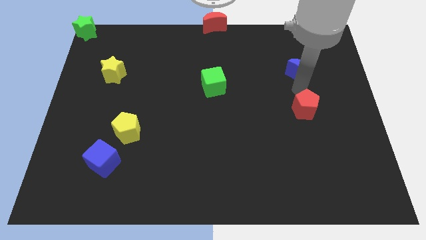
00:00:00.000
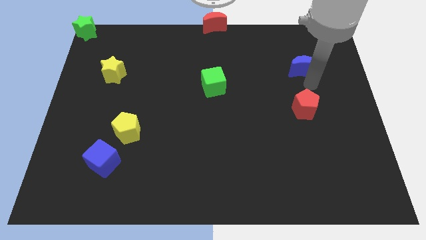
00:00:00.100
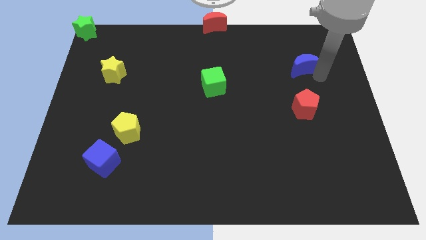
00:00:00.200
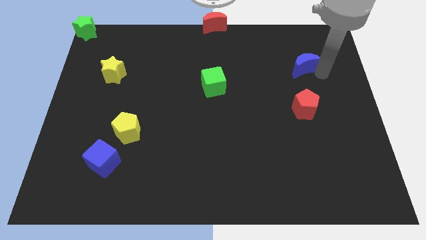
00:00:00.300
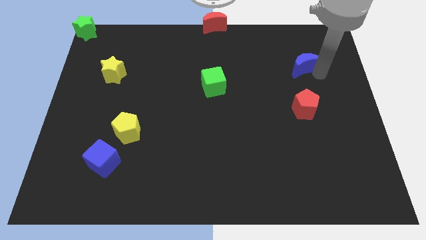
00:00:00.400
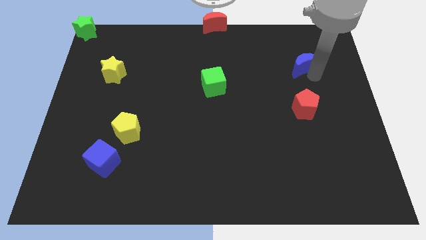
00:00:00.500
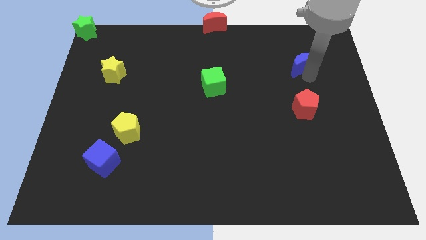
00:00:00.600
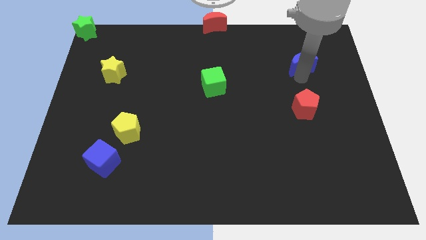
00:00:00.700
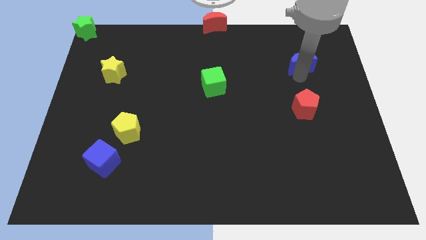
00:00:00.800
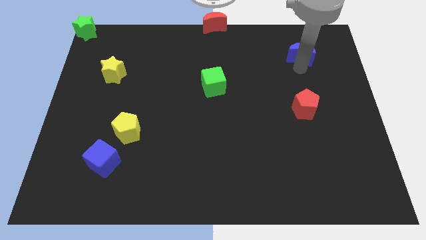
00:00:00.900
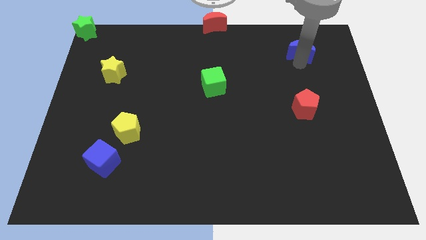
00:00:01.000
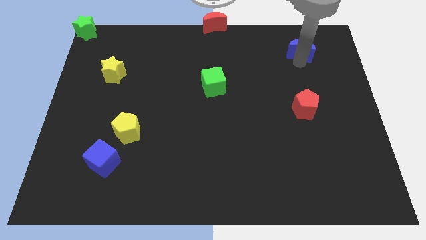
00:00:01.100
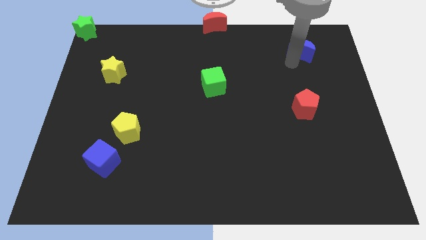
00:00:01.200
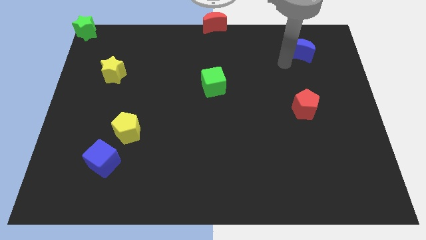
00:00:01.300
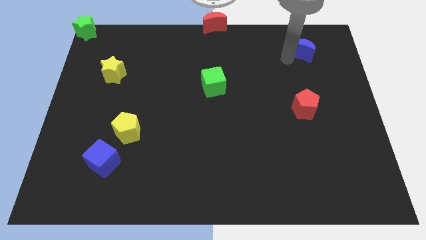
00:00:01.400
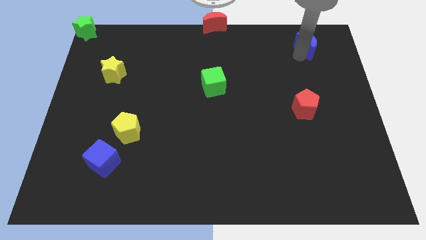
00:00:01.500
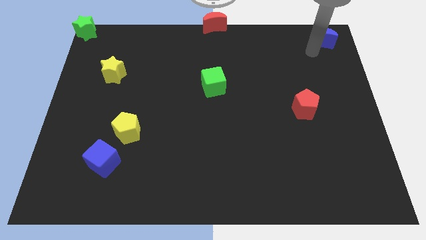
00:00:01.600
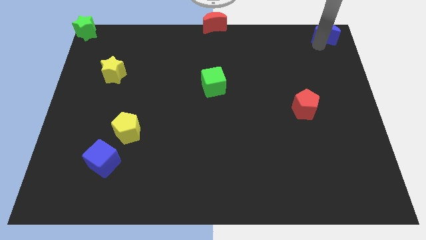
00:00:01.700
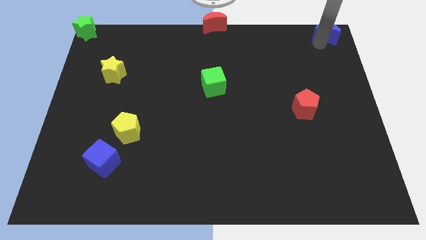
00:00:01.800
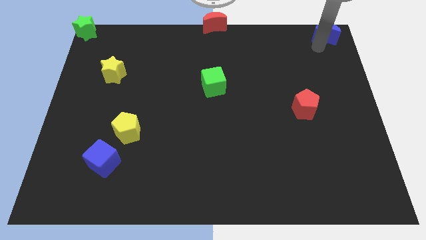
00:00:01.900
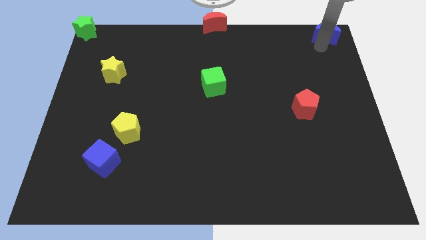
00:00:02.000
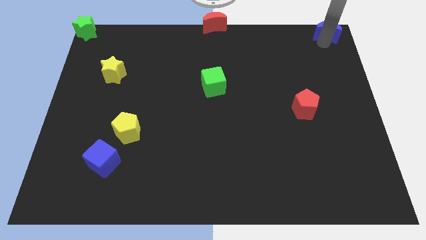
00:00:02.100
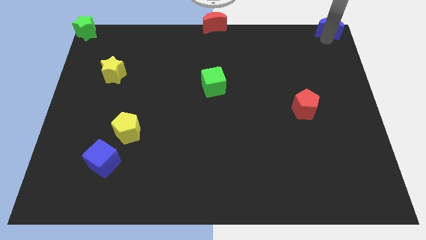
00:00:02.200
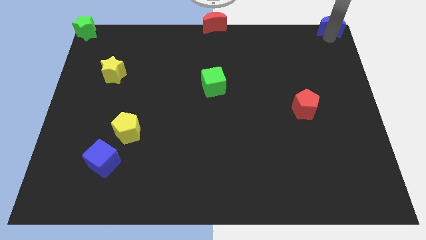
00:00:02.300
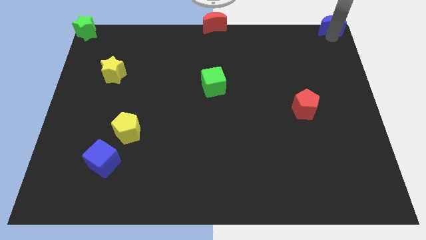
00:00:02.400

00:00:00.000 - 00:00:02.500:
push the blue half moon towards top right corner of the board

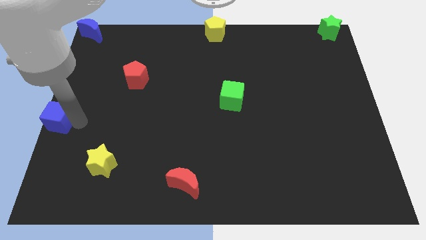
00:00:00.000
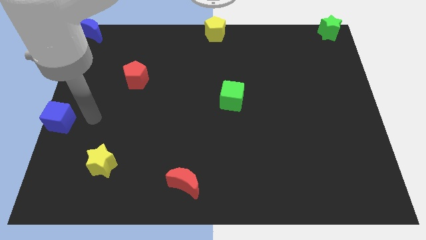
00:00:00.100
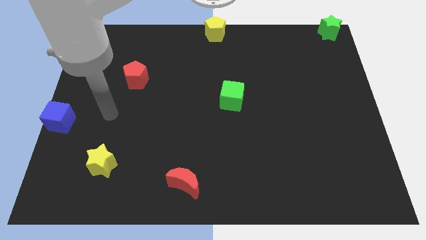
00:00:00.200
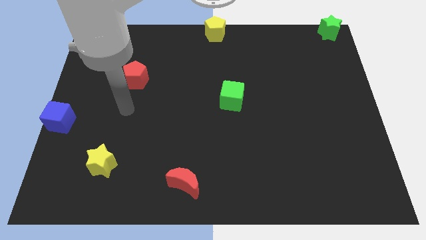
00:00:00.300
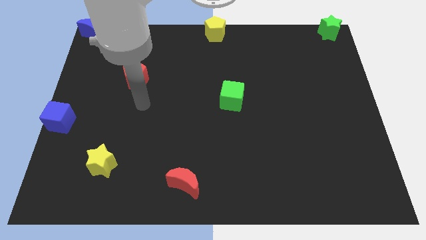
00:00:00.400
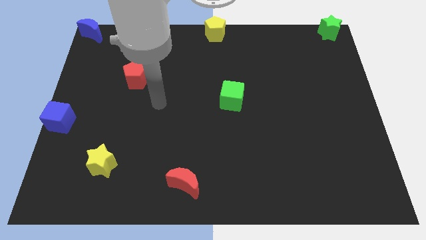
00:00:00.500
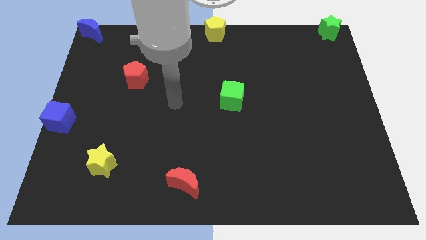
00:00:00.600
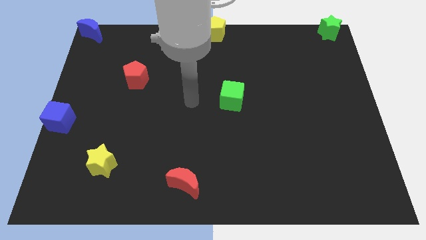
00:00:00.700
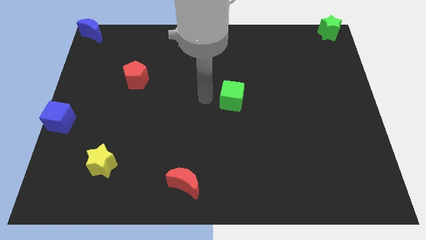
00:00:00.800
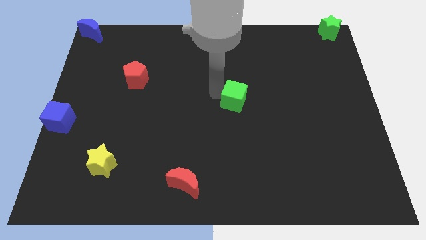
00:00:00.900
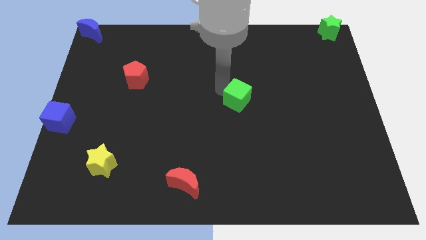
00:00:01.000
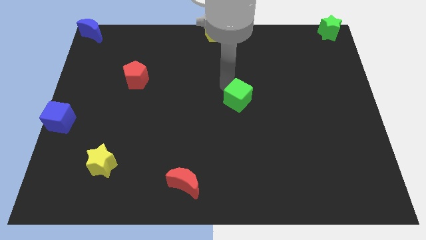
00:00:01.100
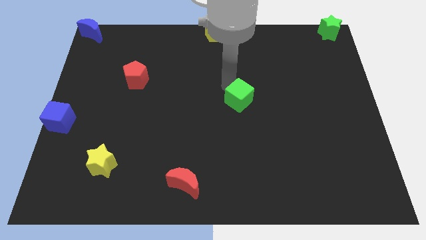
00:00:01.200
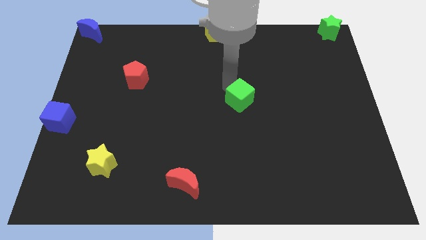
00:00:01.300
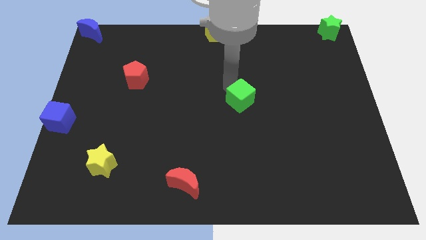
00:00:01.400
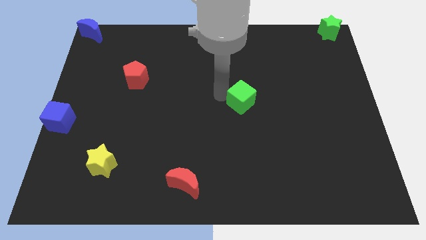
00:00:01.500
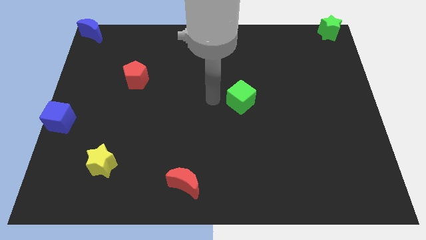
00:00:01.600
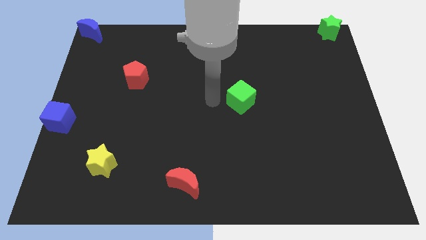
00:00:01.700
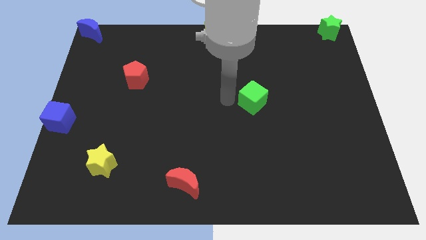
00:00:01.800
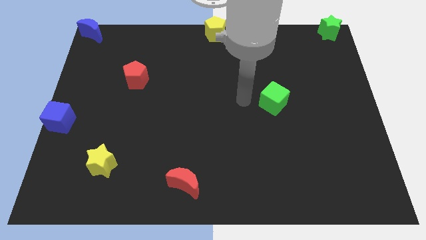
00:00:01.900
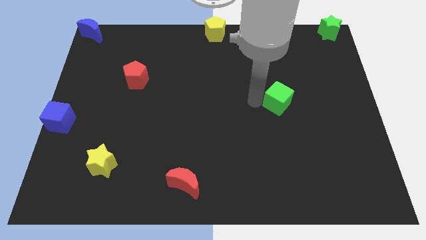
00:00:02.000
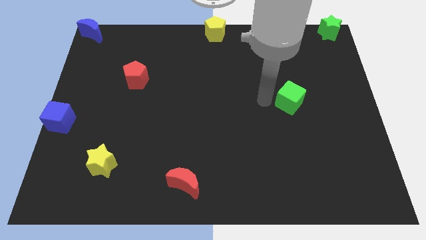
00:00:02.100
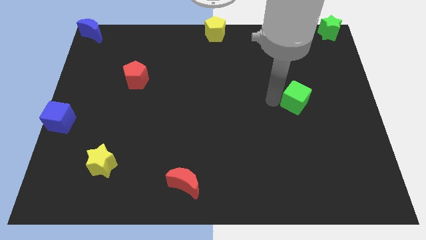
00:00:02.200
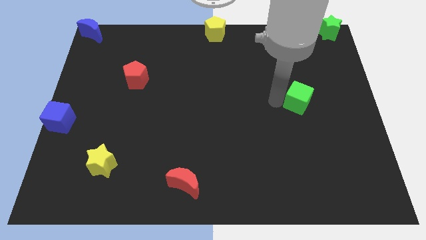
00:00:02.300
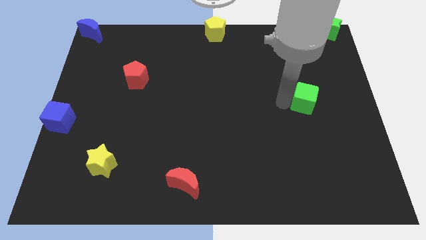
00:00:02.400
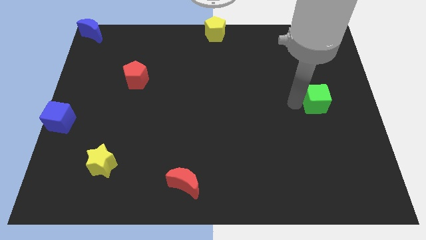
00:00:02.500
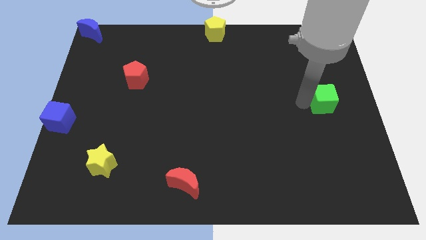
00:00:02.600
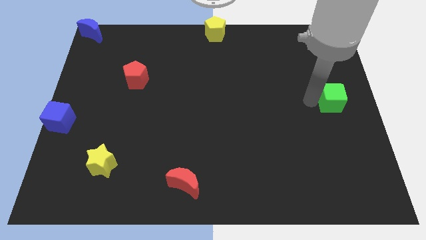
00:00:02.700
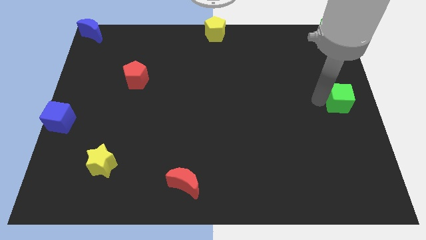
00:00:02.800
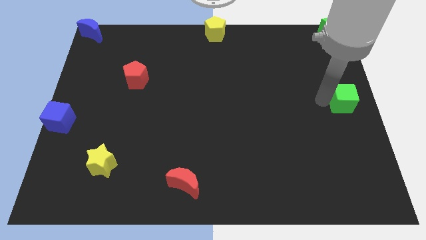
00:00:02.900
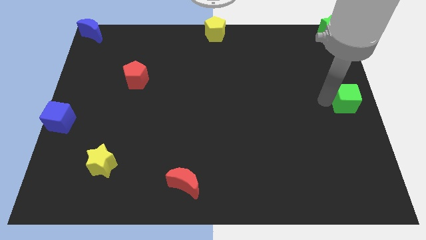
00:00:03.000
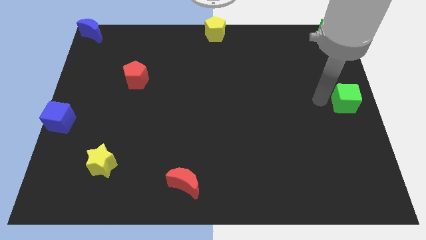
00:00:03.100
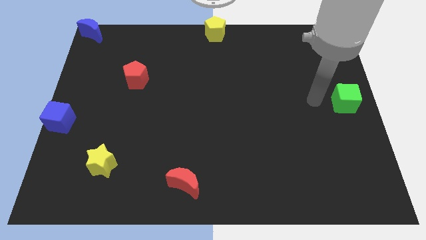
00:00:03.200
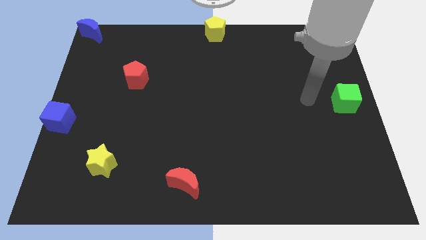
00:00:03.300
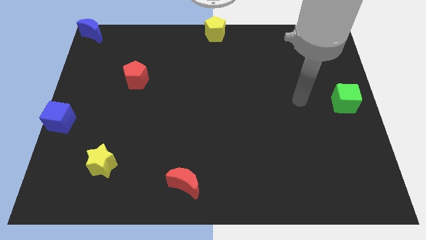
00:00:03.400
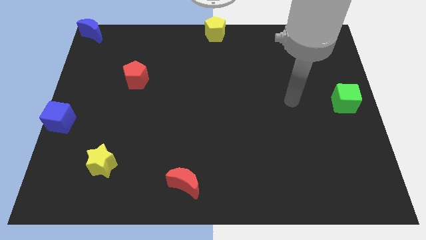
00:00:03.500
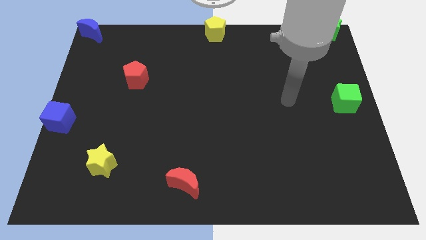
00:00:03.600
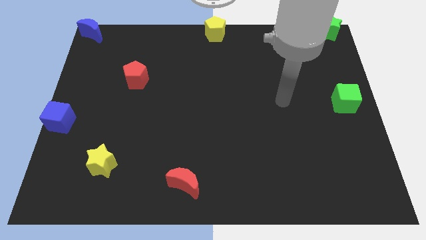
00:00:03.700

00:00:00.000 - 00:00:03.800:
push the green cube to the right side of the board

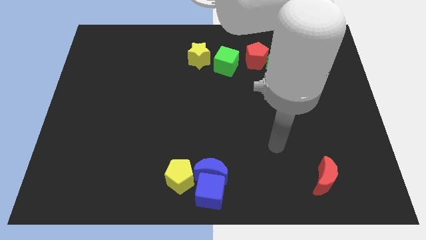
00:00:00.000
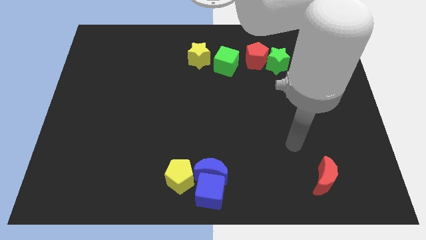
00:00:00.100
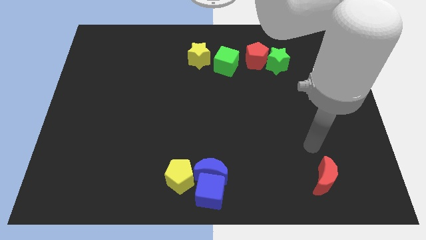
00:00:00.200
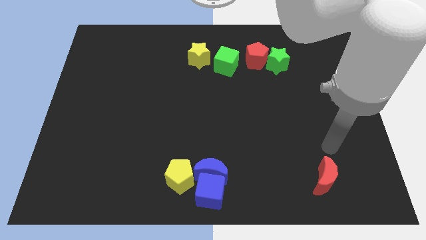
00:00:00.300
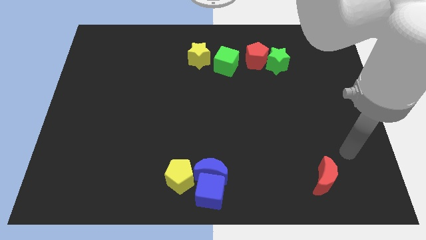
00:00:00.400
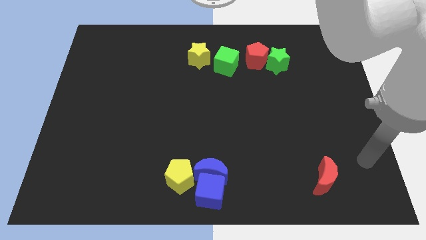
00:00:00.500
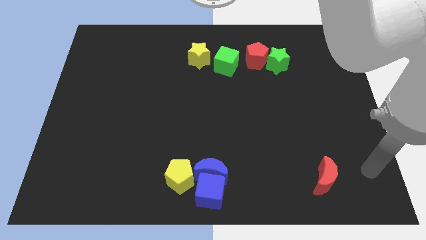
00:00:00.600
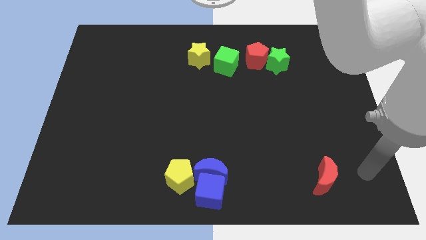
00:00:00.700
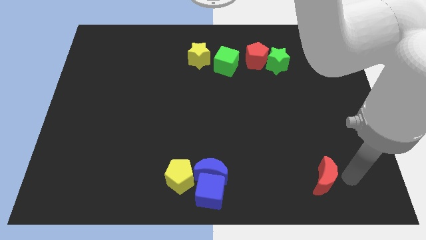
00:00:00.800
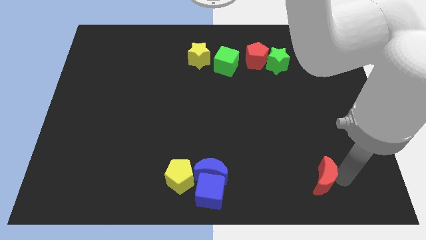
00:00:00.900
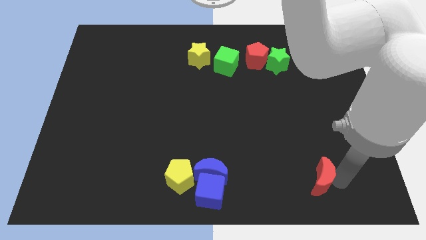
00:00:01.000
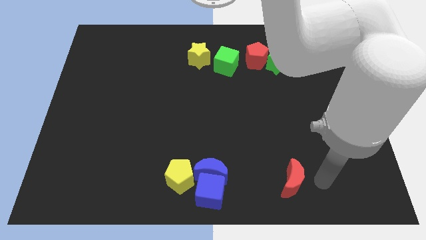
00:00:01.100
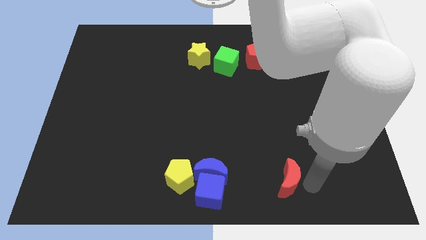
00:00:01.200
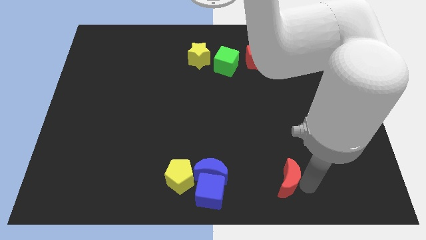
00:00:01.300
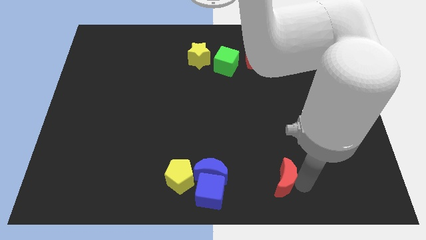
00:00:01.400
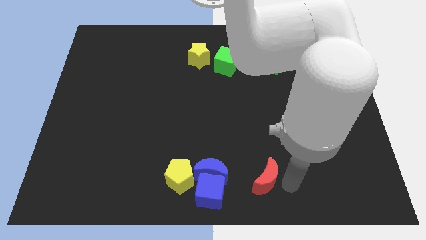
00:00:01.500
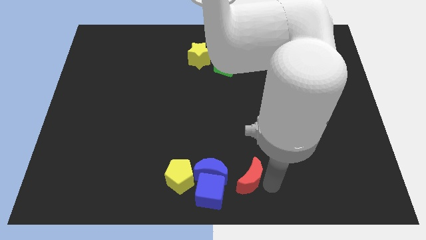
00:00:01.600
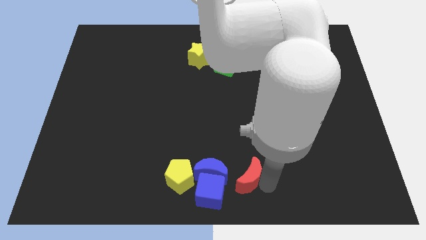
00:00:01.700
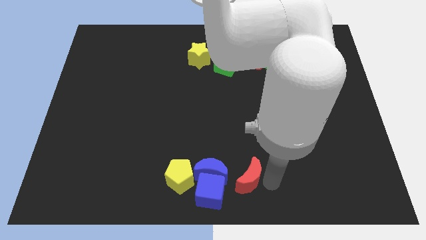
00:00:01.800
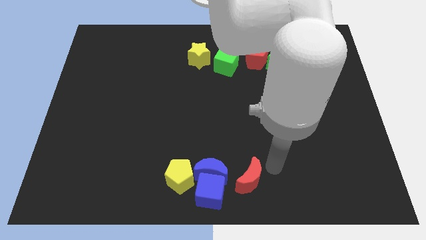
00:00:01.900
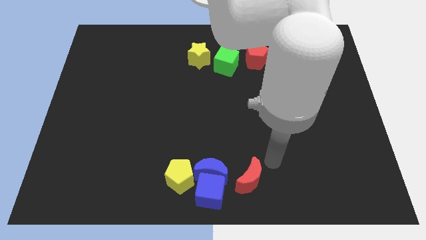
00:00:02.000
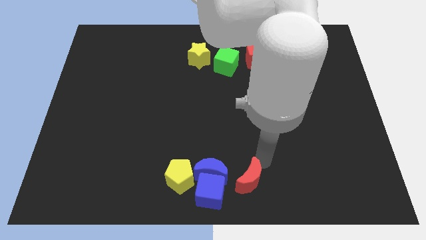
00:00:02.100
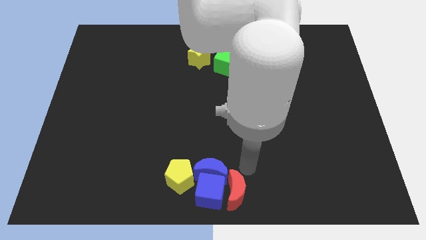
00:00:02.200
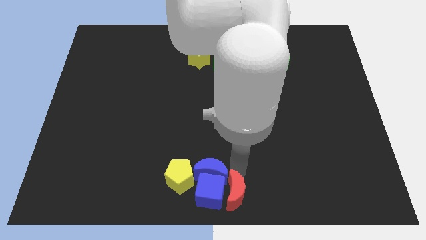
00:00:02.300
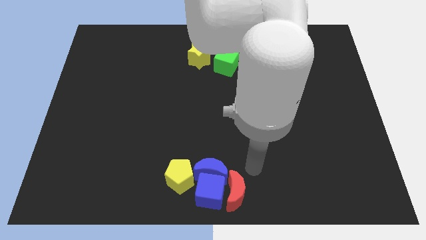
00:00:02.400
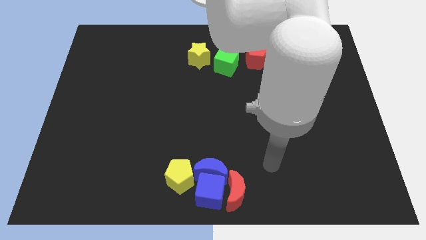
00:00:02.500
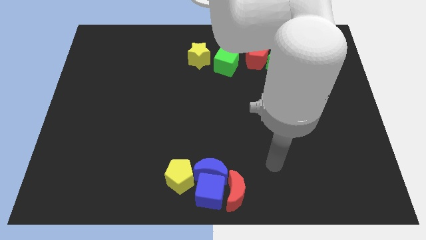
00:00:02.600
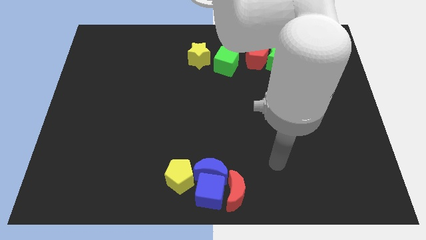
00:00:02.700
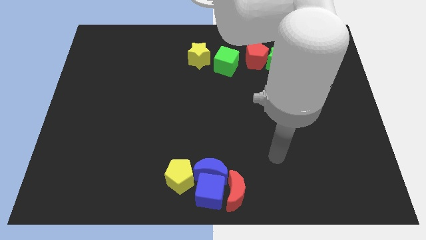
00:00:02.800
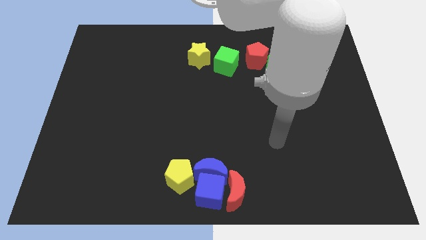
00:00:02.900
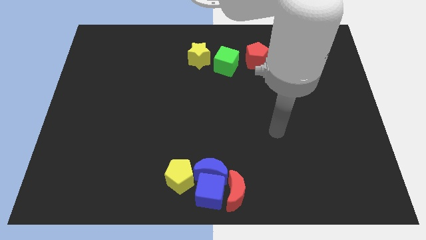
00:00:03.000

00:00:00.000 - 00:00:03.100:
push the red crescent to the bottom center of the board
